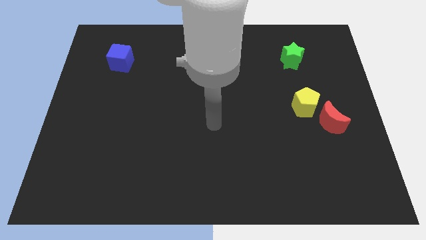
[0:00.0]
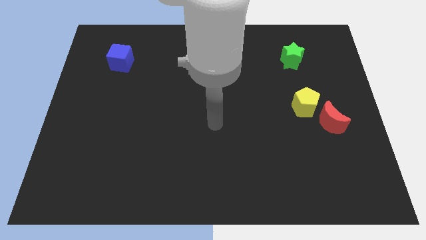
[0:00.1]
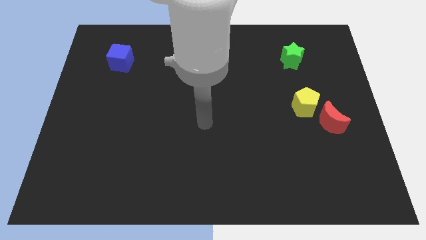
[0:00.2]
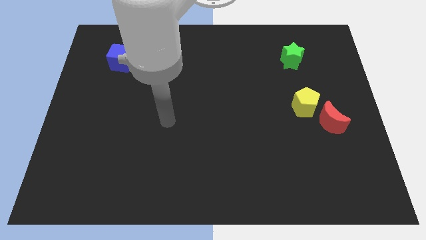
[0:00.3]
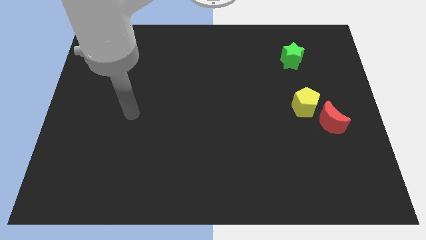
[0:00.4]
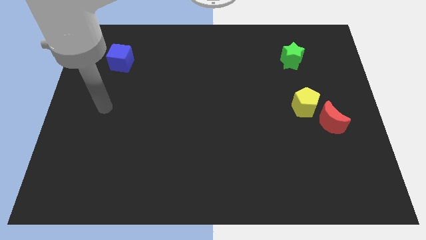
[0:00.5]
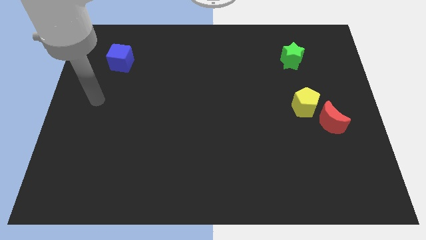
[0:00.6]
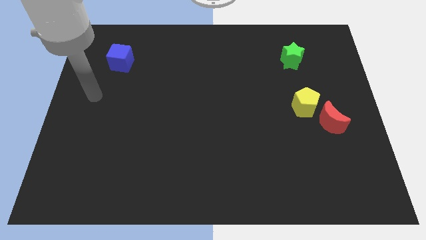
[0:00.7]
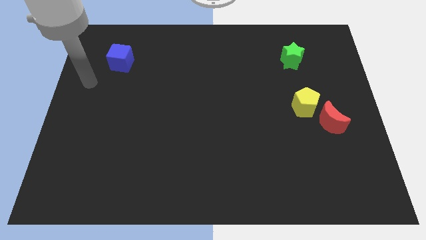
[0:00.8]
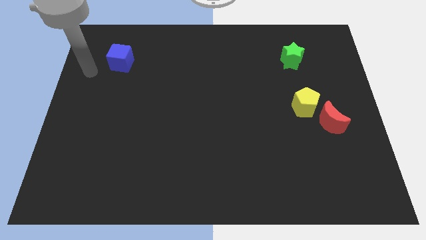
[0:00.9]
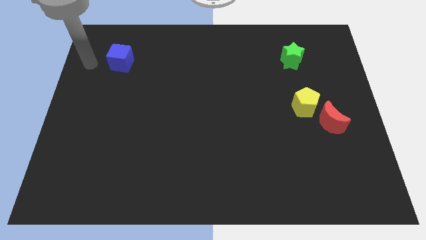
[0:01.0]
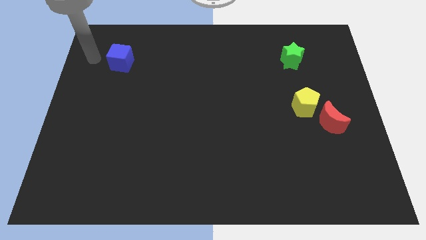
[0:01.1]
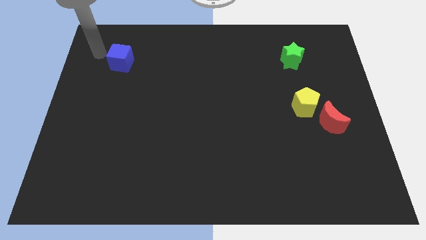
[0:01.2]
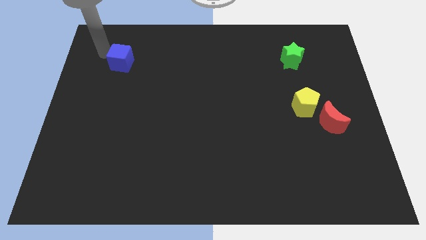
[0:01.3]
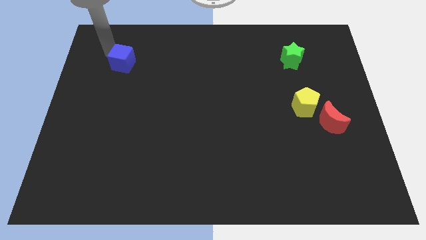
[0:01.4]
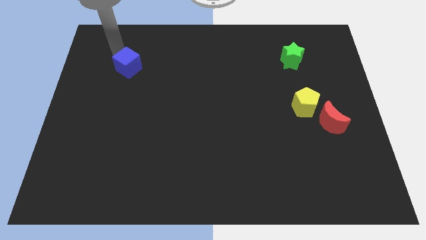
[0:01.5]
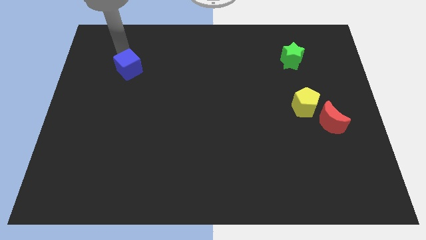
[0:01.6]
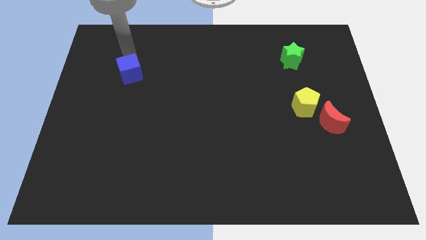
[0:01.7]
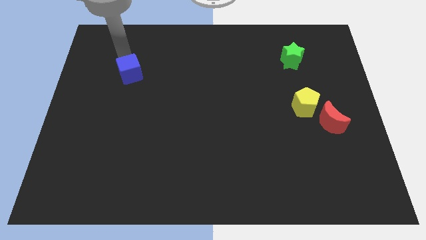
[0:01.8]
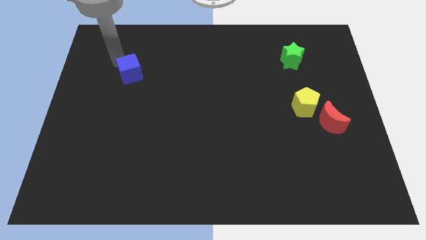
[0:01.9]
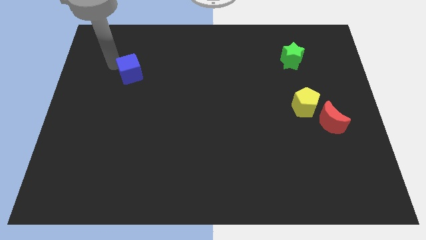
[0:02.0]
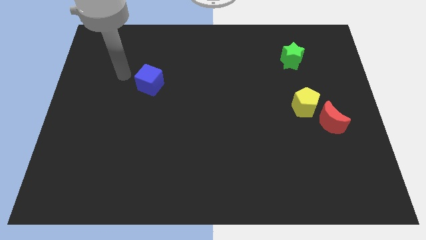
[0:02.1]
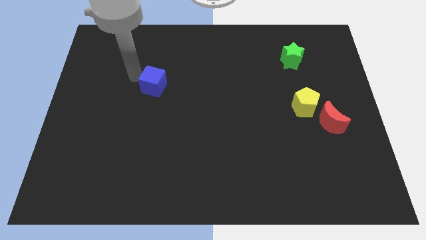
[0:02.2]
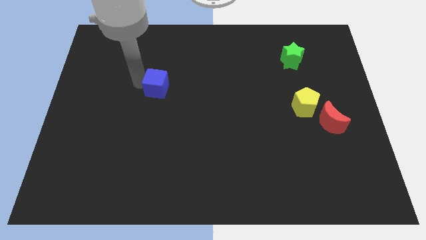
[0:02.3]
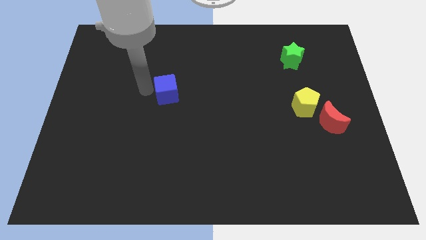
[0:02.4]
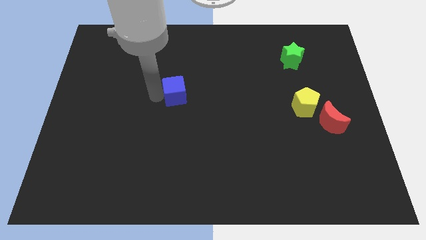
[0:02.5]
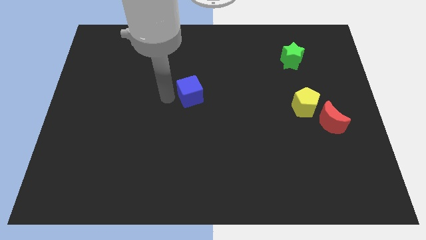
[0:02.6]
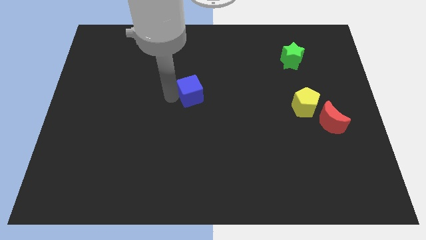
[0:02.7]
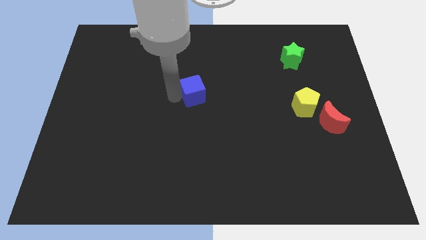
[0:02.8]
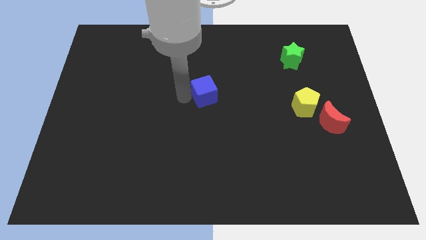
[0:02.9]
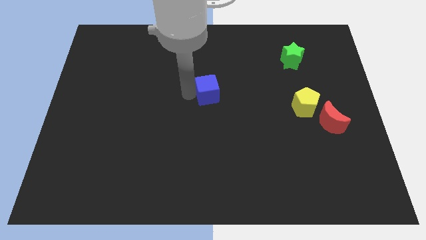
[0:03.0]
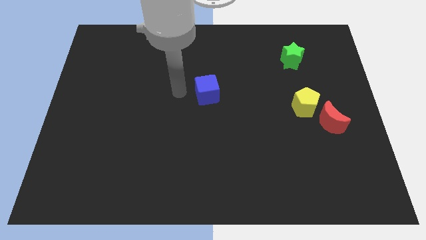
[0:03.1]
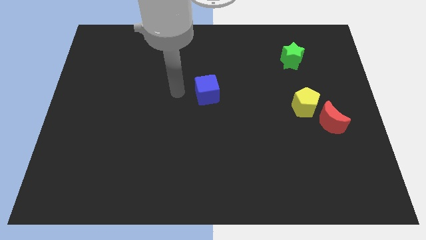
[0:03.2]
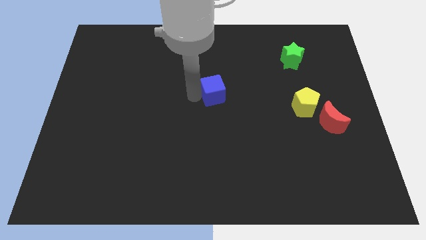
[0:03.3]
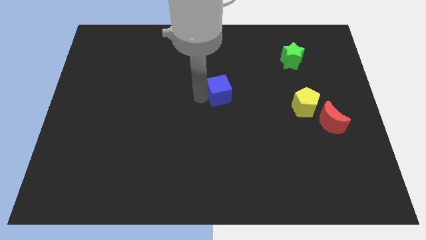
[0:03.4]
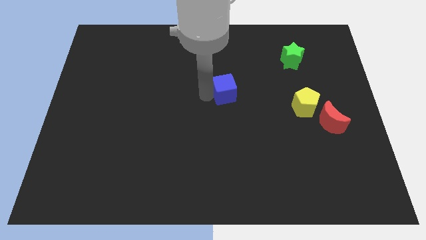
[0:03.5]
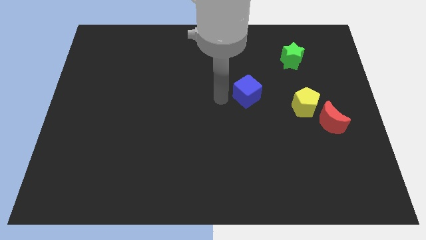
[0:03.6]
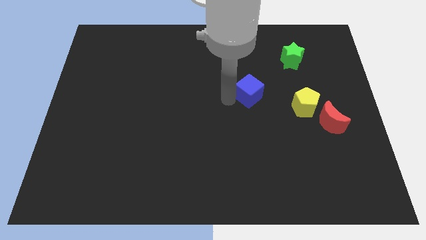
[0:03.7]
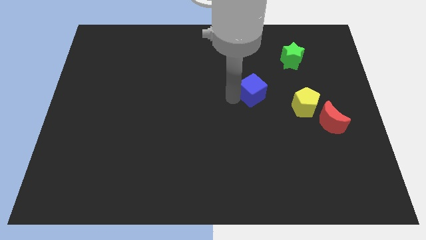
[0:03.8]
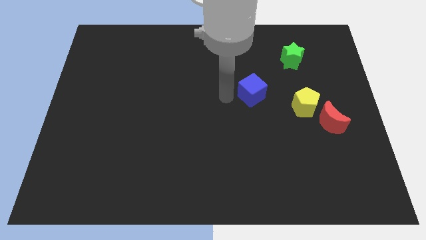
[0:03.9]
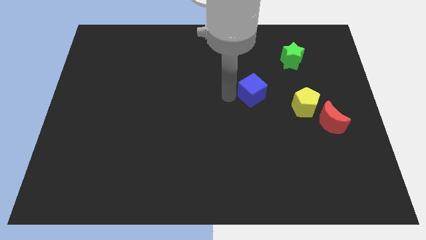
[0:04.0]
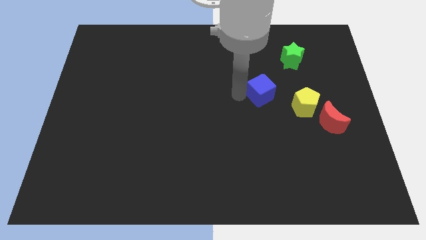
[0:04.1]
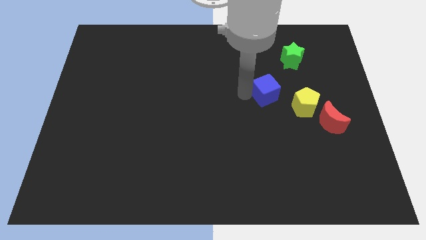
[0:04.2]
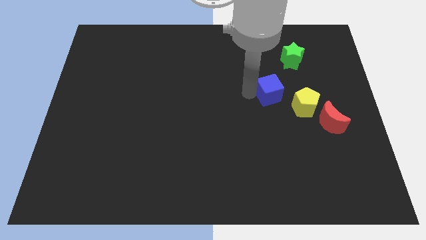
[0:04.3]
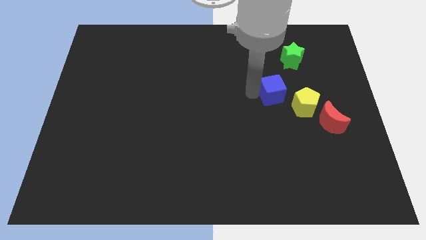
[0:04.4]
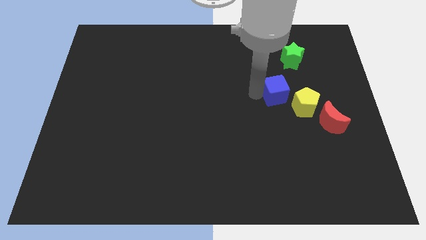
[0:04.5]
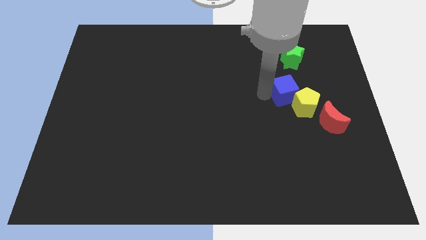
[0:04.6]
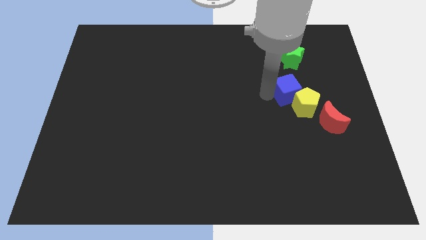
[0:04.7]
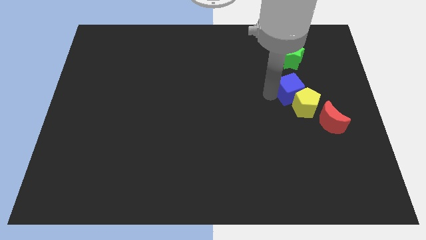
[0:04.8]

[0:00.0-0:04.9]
slide the blue block next to the pentagon

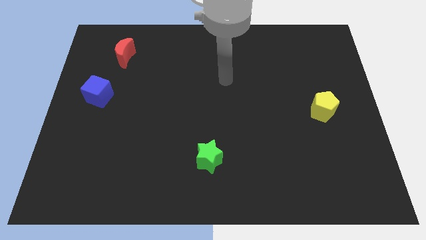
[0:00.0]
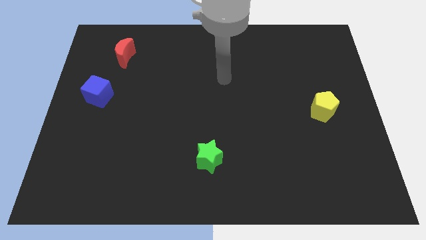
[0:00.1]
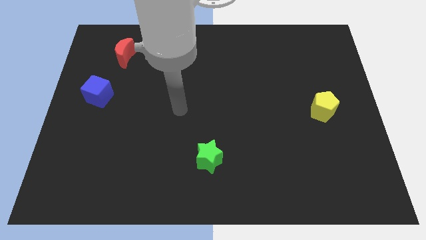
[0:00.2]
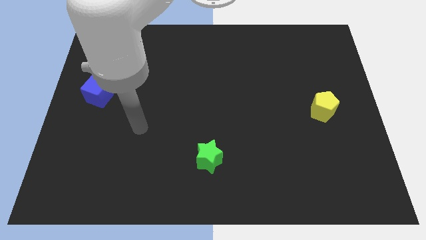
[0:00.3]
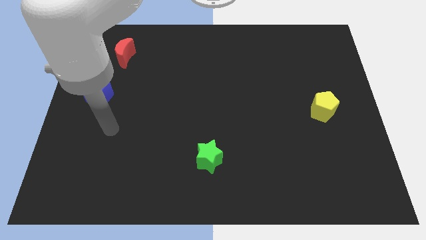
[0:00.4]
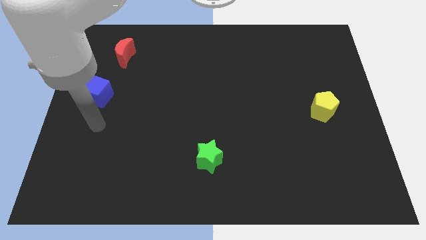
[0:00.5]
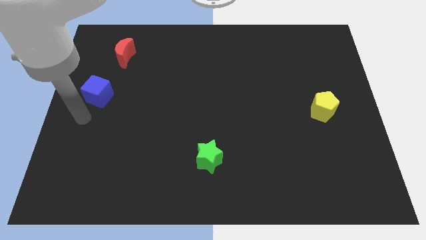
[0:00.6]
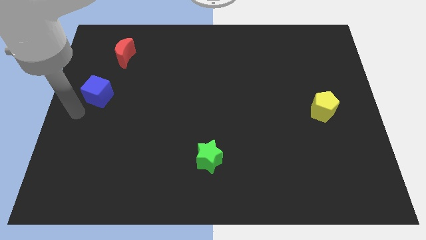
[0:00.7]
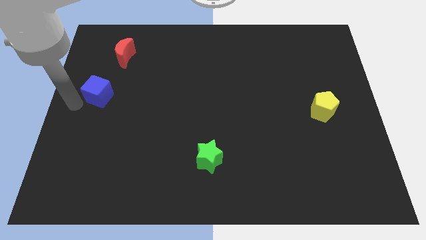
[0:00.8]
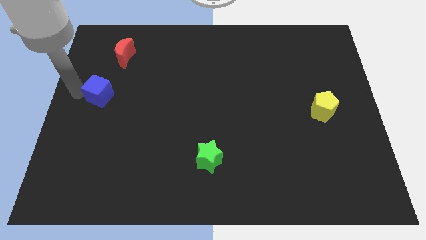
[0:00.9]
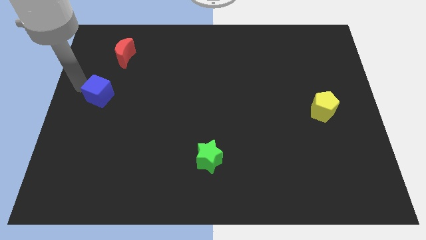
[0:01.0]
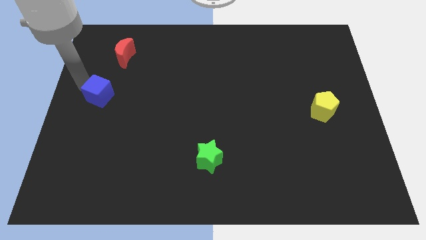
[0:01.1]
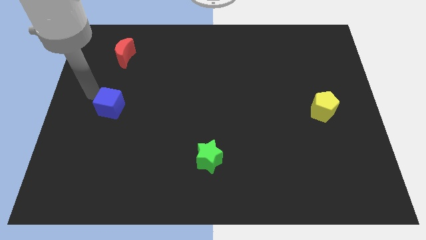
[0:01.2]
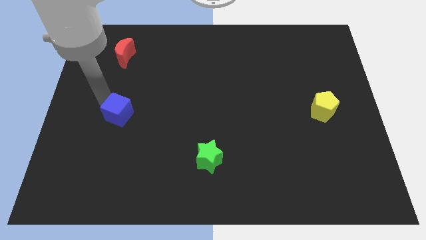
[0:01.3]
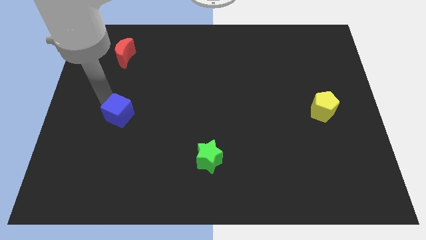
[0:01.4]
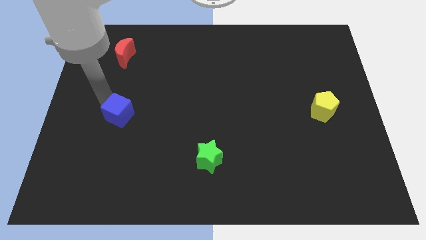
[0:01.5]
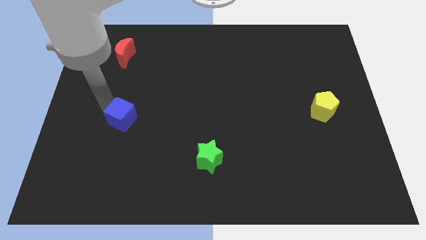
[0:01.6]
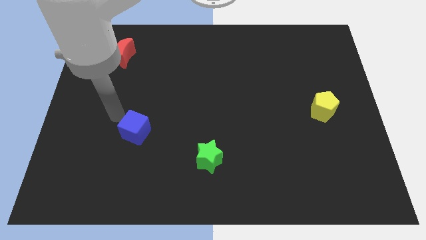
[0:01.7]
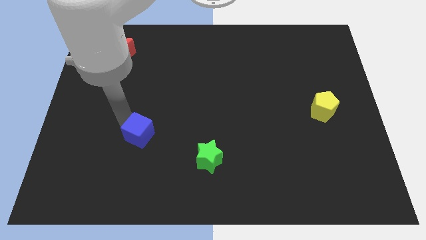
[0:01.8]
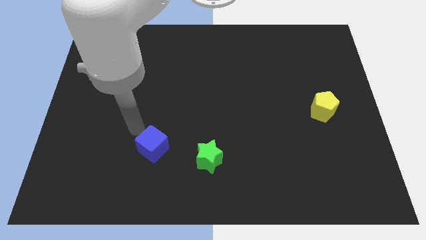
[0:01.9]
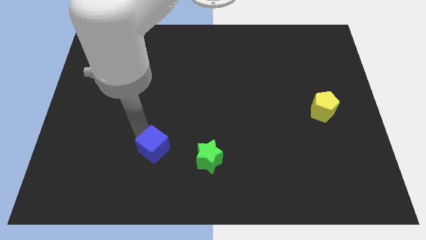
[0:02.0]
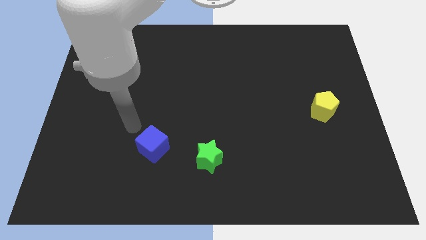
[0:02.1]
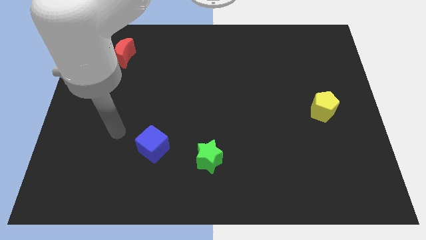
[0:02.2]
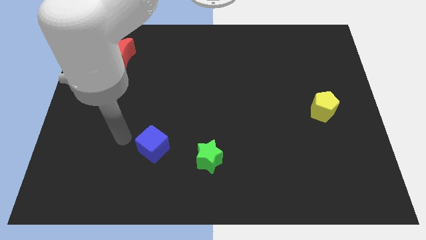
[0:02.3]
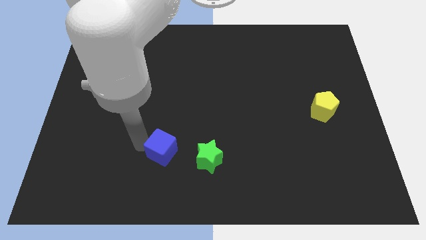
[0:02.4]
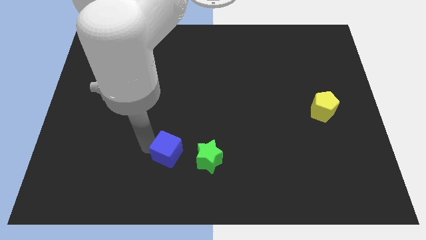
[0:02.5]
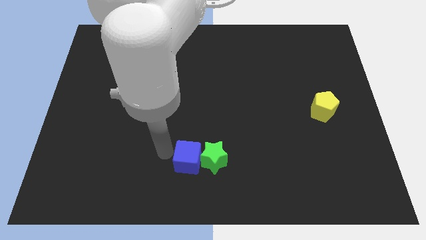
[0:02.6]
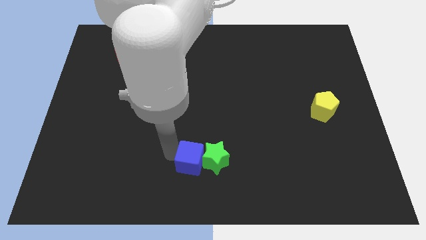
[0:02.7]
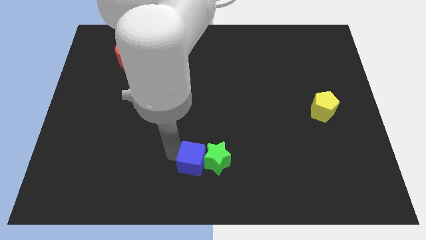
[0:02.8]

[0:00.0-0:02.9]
push the blue cube close to the green star

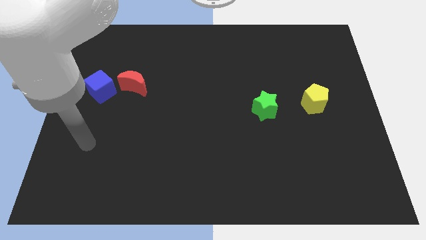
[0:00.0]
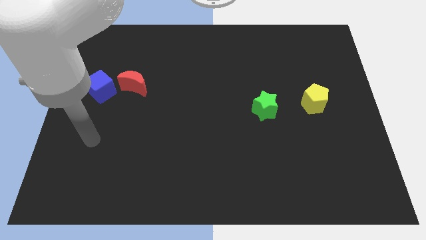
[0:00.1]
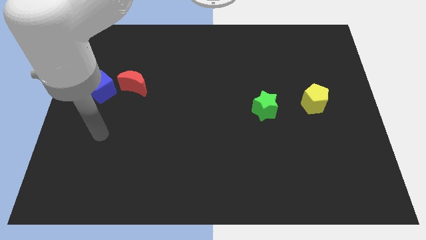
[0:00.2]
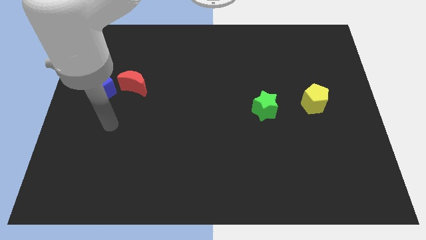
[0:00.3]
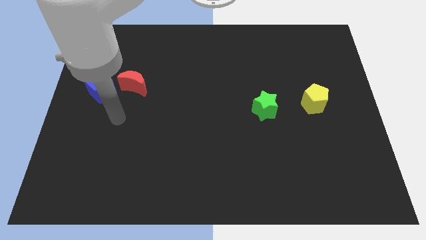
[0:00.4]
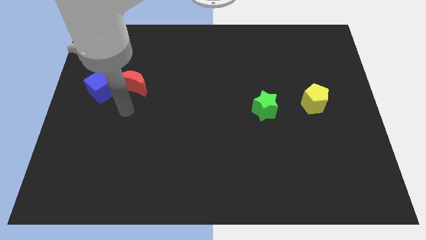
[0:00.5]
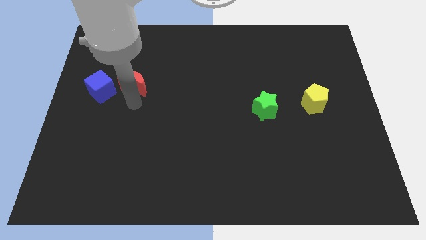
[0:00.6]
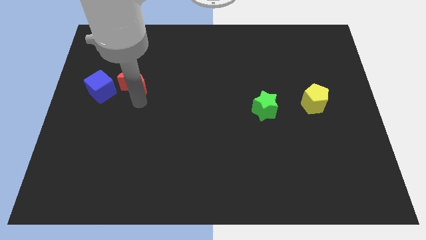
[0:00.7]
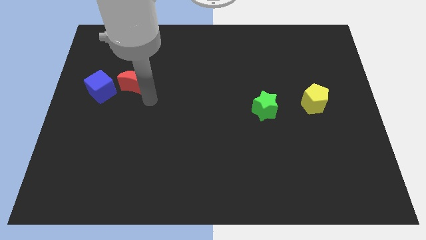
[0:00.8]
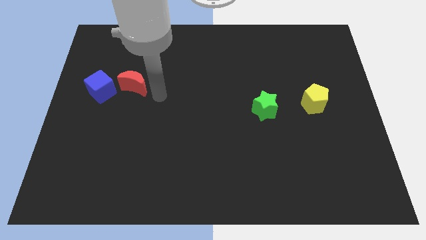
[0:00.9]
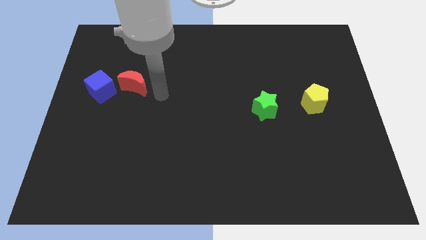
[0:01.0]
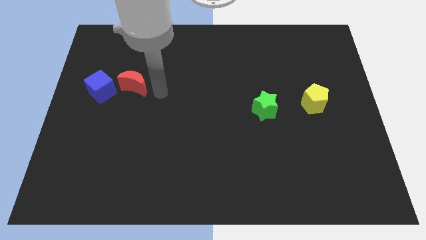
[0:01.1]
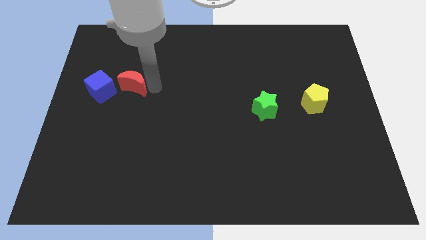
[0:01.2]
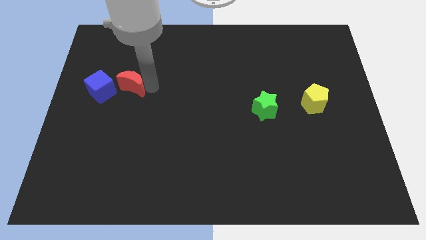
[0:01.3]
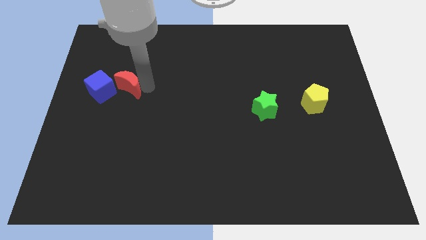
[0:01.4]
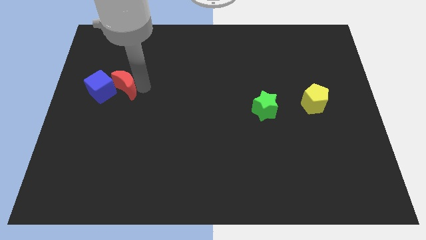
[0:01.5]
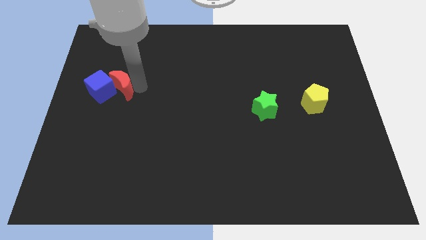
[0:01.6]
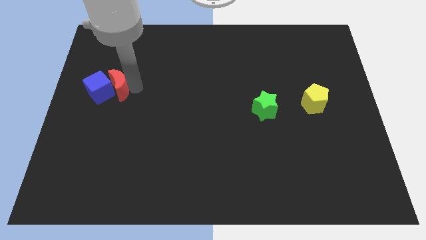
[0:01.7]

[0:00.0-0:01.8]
put the red moon to the blue cube
